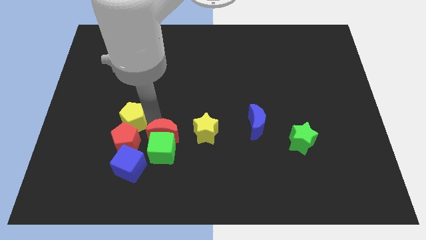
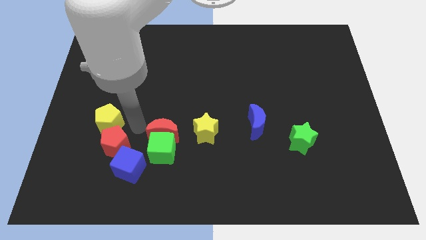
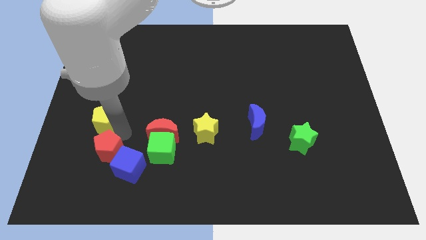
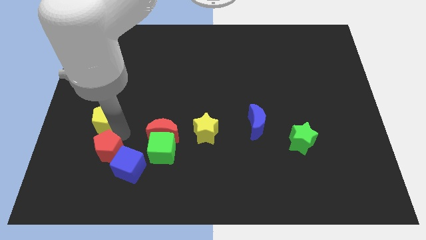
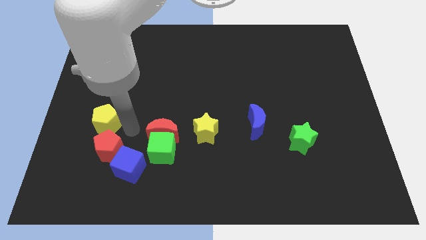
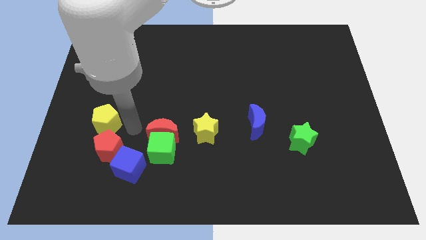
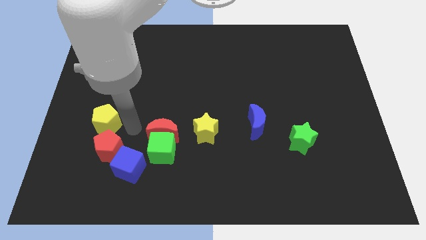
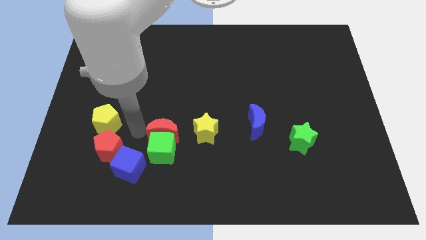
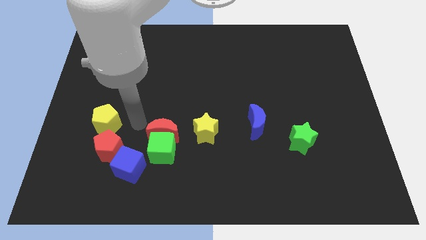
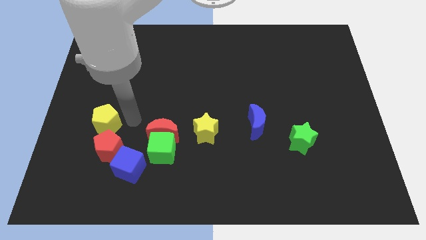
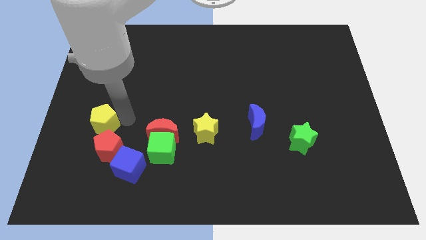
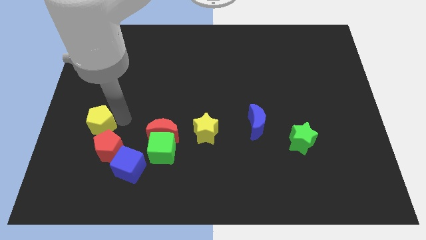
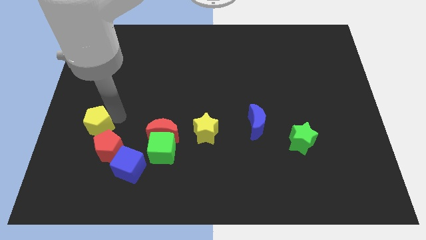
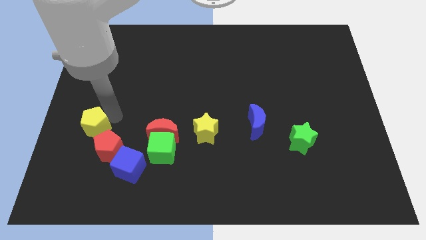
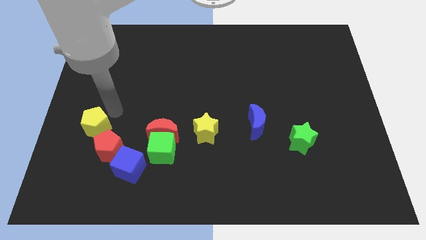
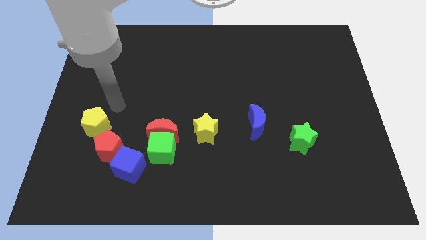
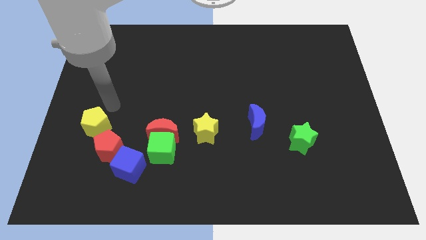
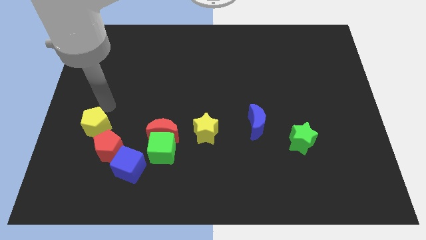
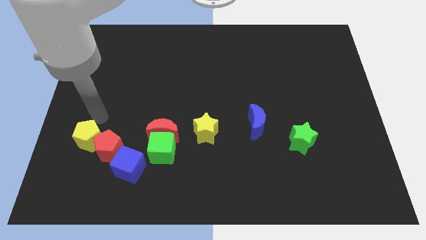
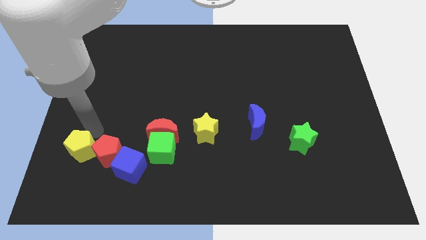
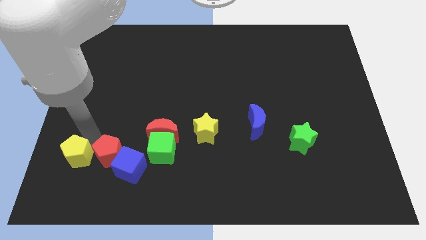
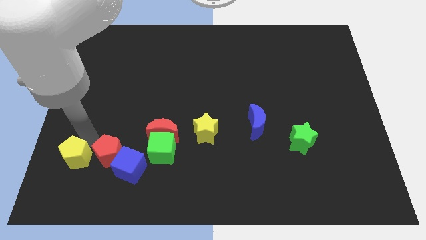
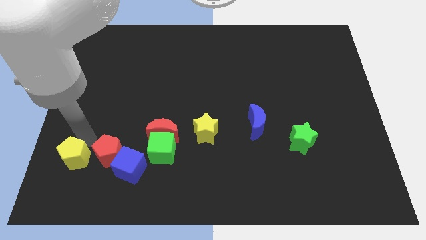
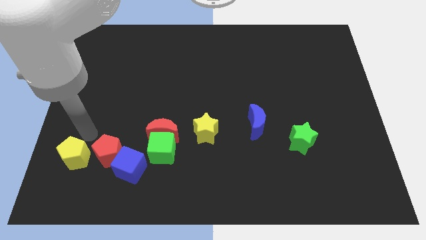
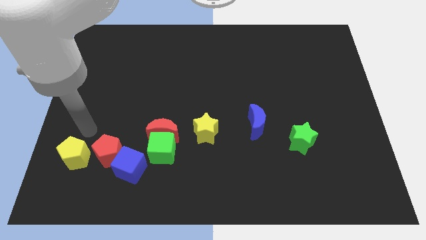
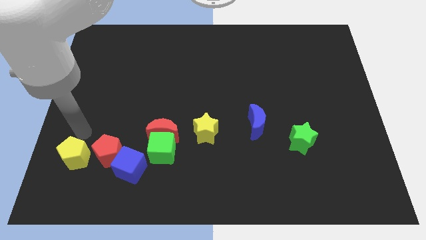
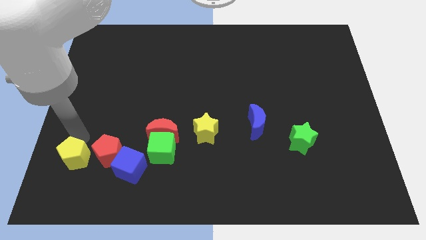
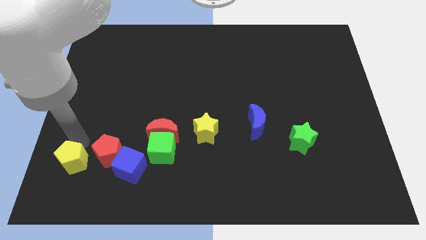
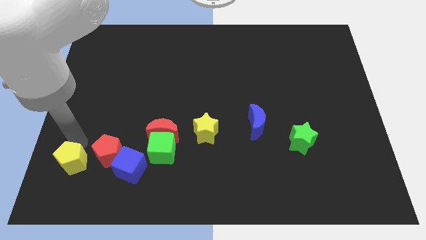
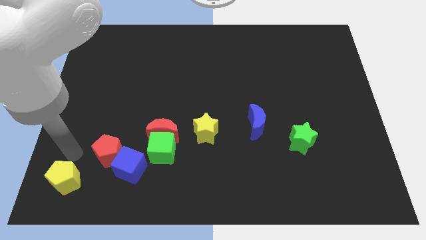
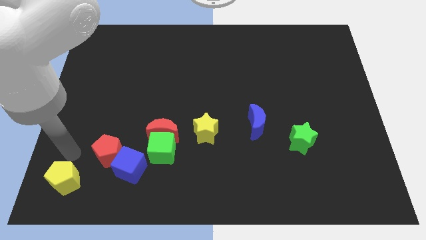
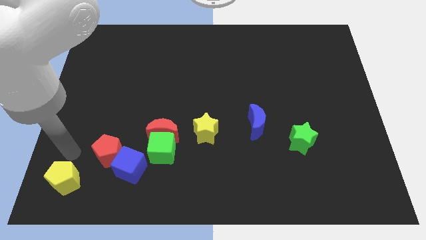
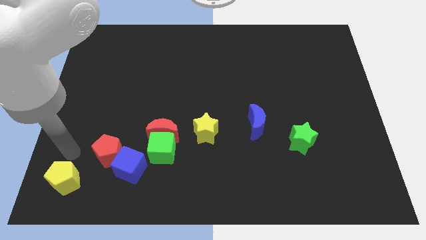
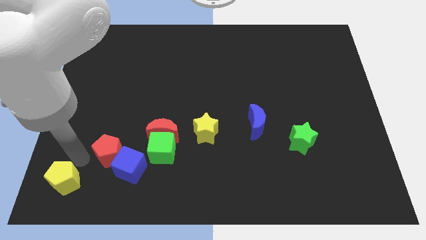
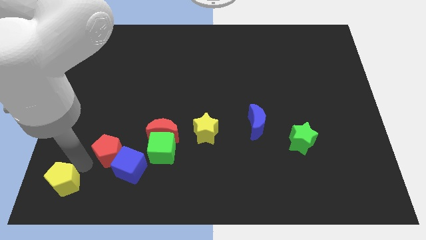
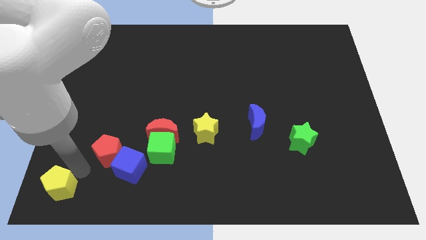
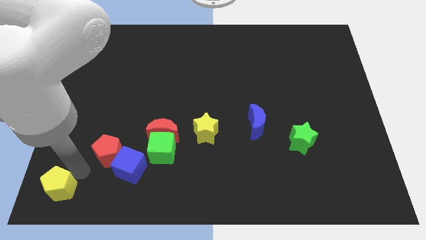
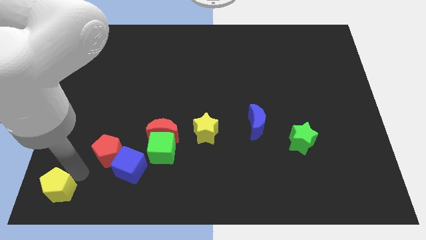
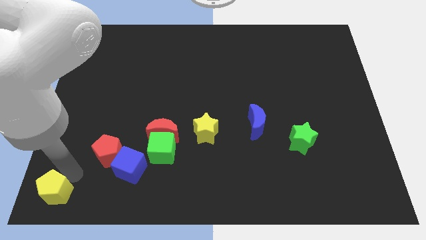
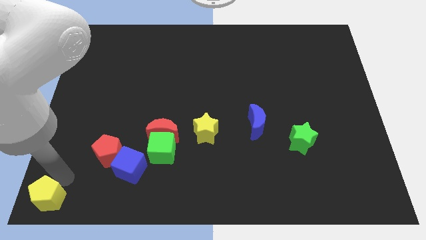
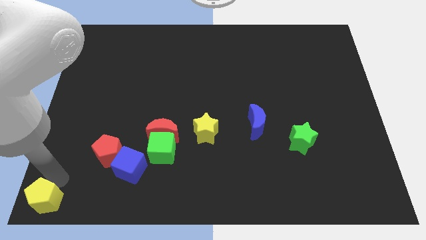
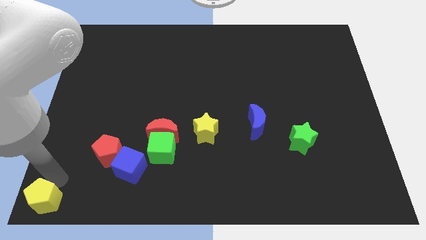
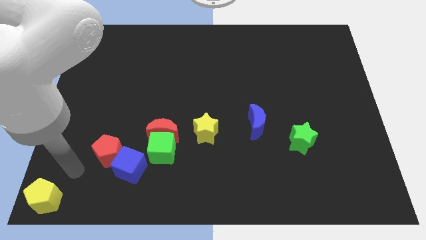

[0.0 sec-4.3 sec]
move the yellow pentagon towards the bottom left corner

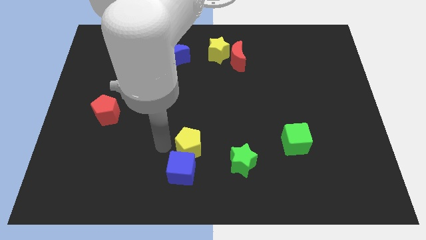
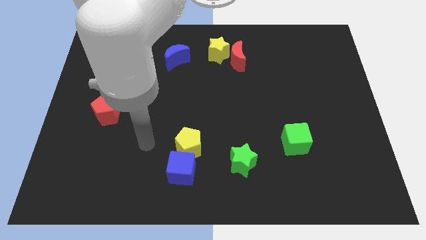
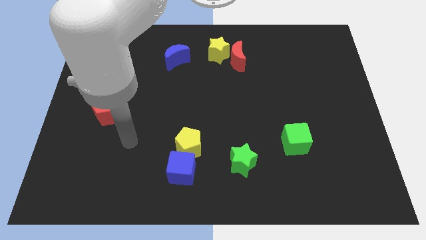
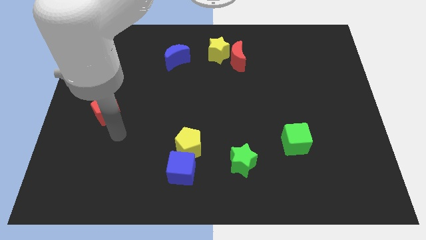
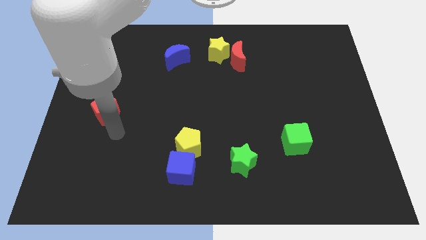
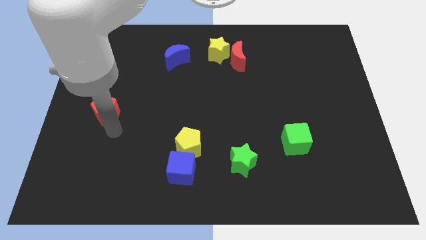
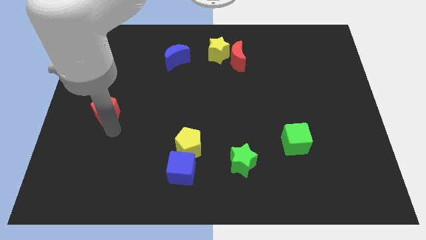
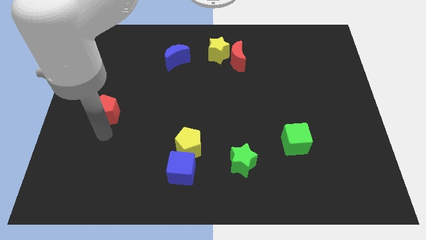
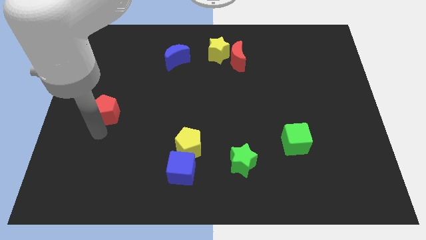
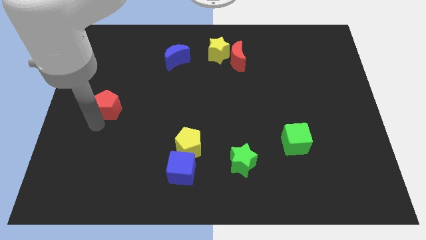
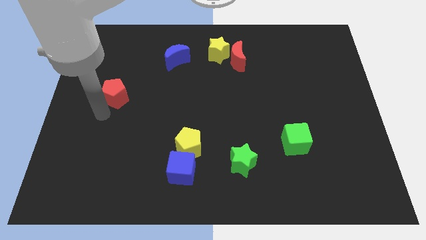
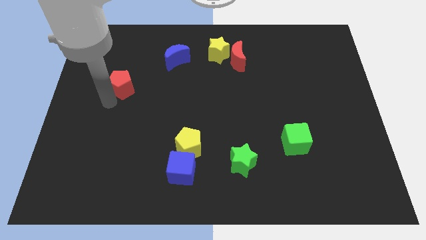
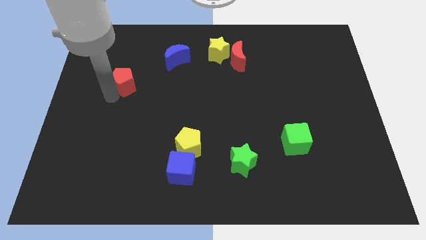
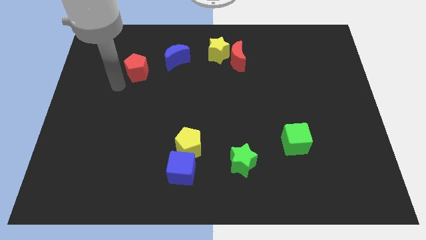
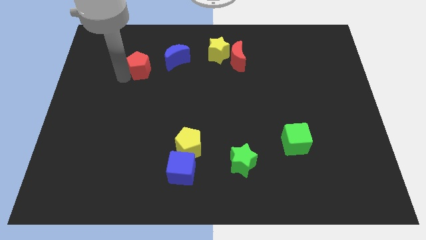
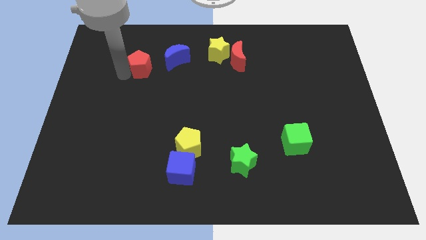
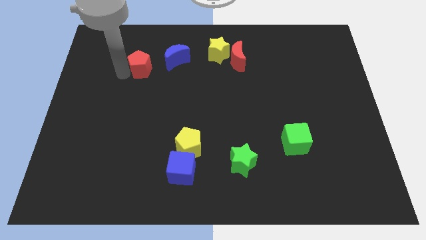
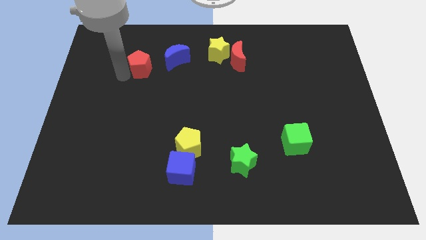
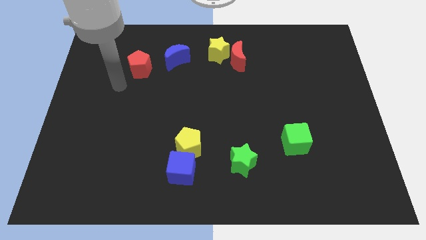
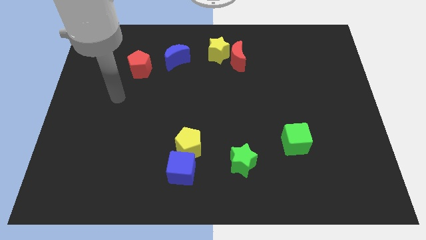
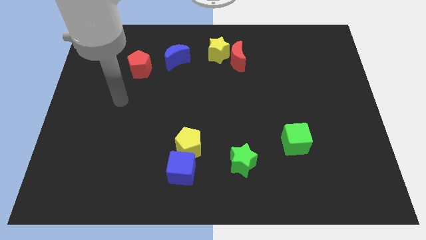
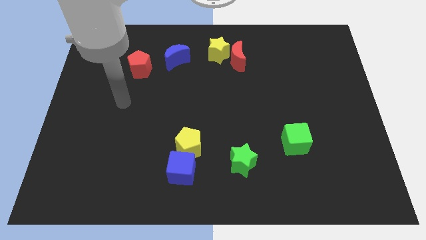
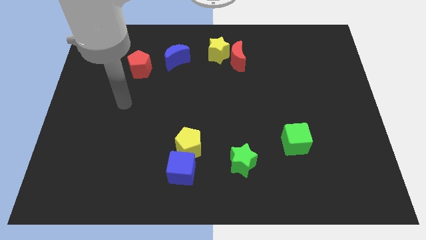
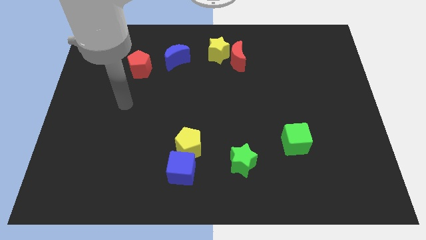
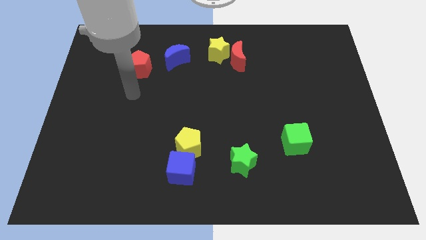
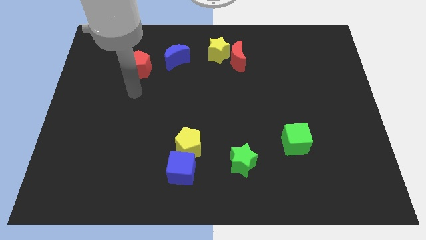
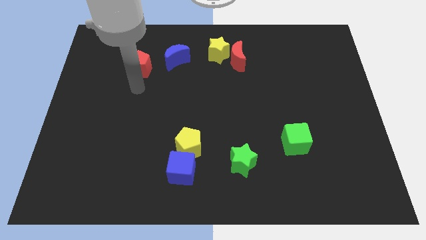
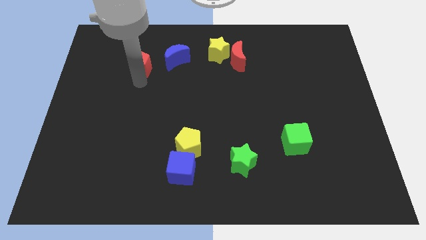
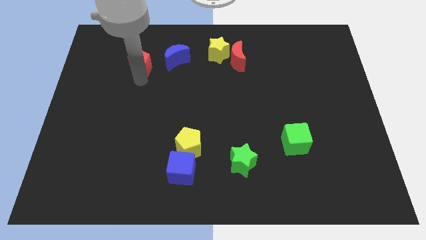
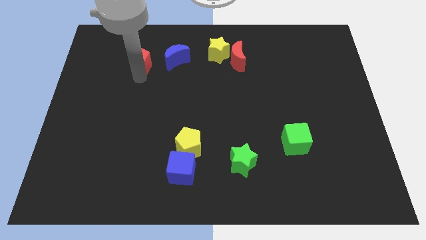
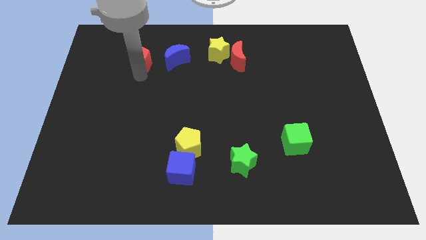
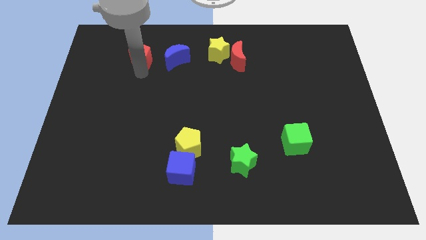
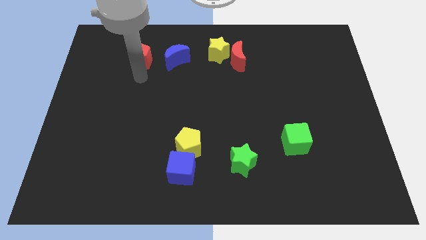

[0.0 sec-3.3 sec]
move the red pentagon to the left of the blue crescent

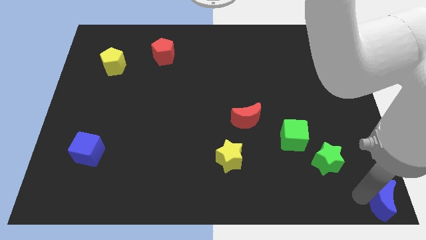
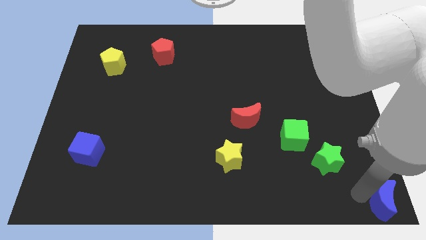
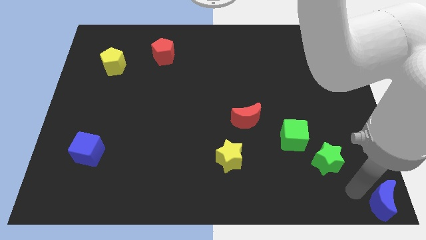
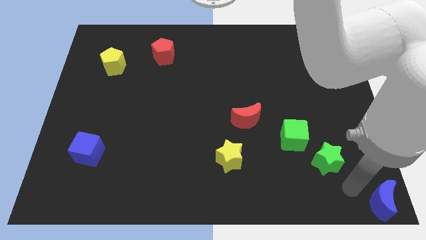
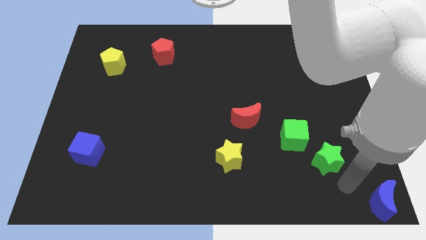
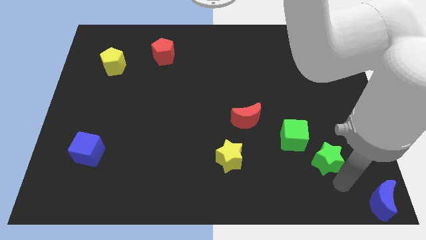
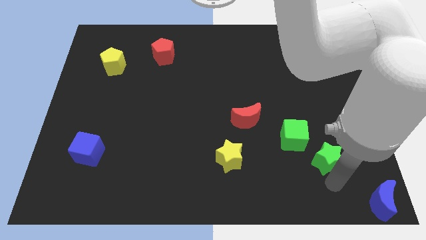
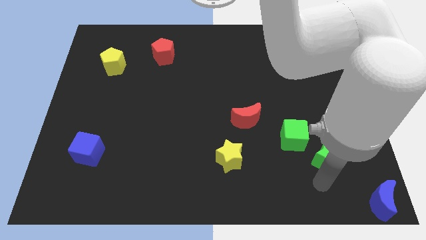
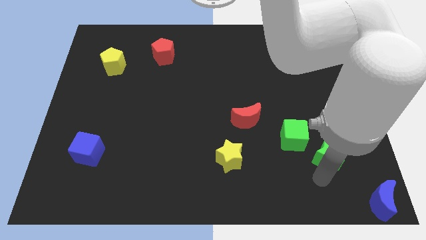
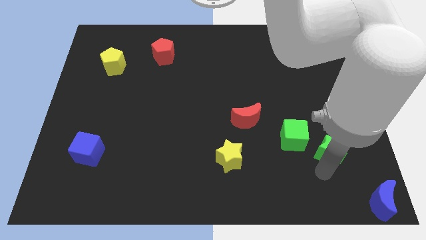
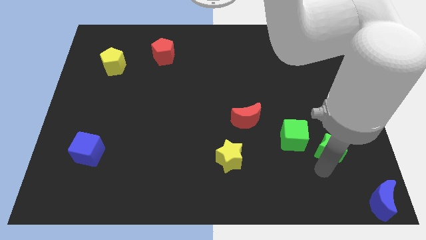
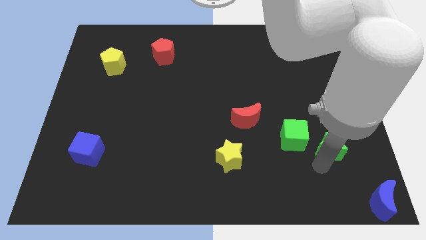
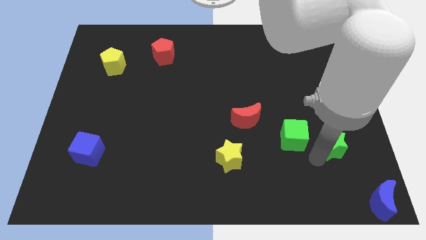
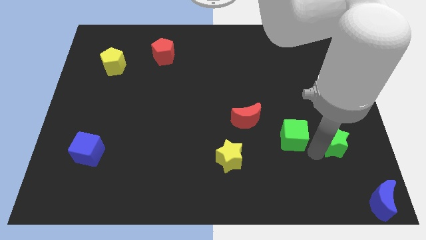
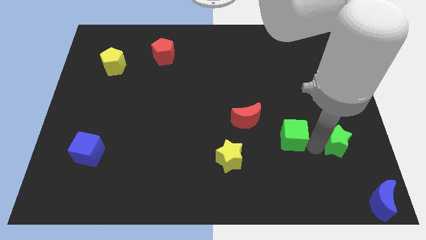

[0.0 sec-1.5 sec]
push the green star slightly to the top
